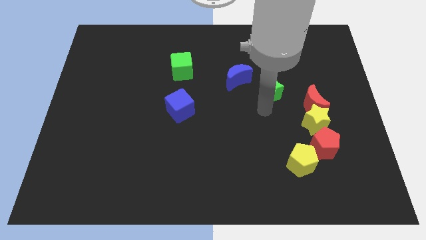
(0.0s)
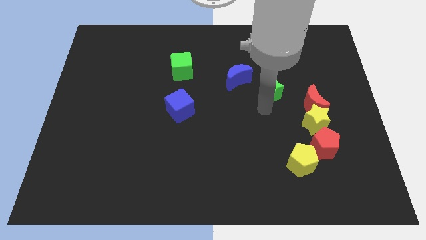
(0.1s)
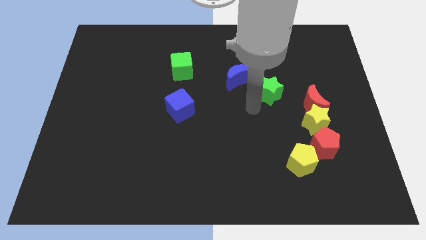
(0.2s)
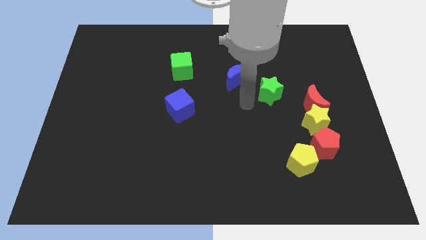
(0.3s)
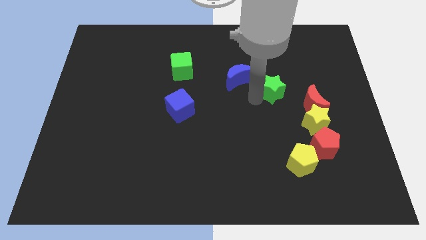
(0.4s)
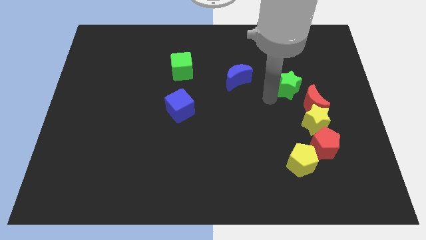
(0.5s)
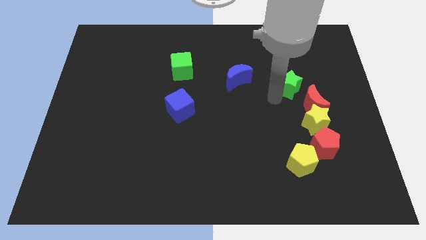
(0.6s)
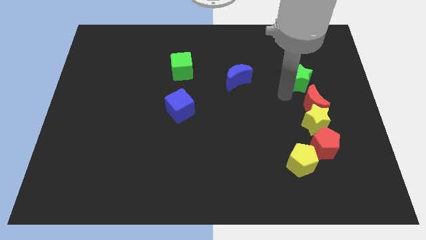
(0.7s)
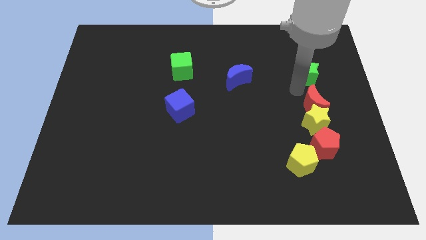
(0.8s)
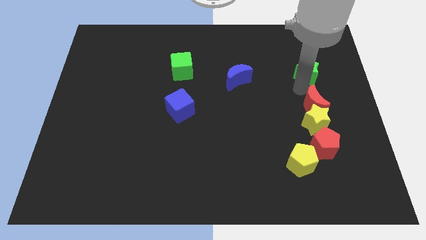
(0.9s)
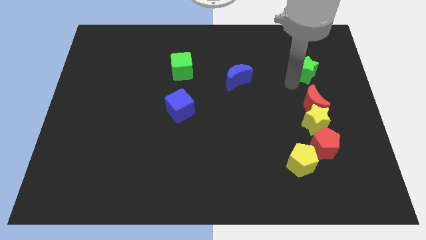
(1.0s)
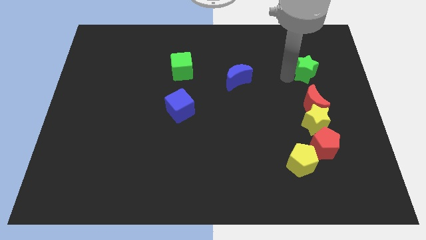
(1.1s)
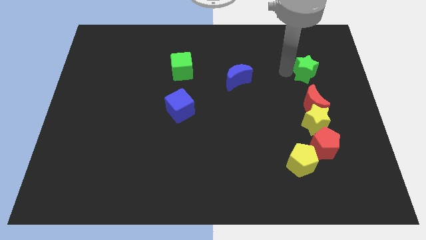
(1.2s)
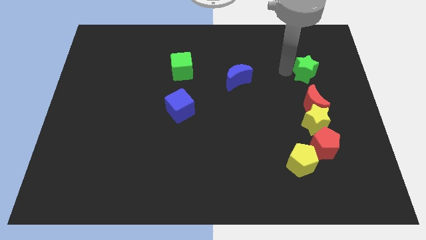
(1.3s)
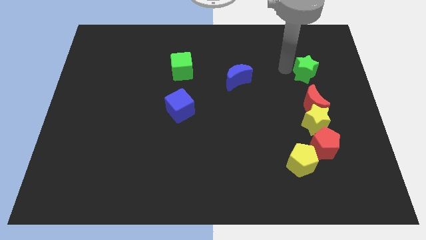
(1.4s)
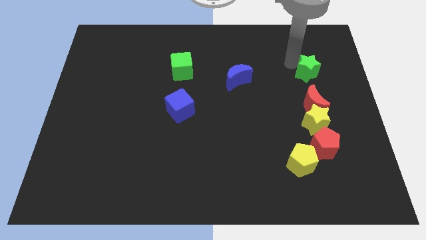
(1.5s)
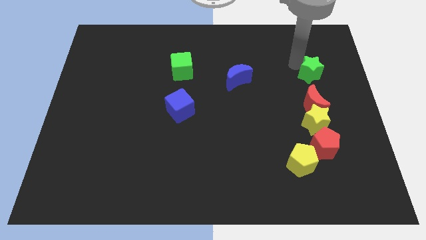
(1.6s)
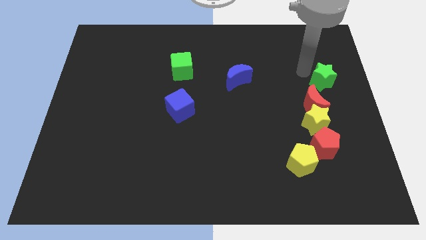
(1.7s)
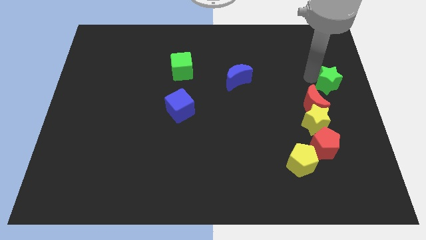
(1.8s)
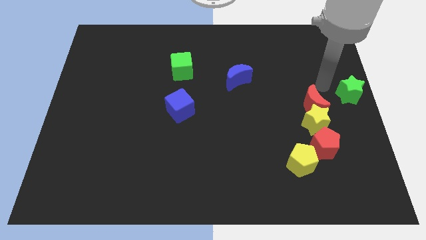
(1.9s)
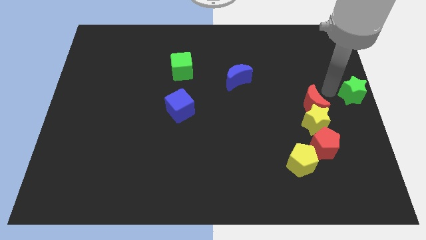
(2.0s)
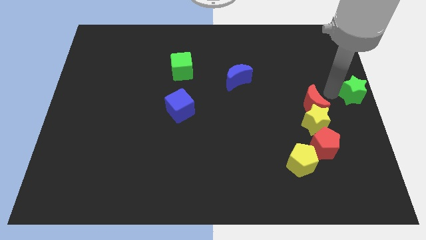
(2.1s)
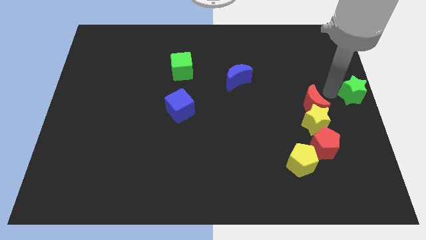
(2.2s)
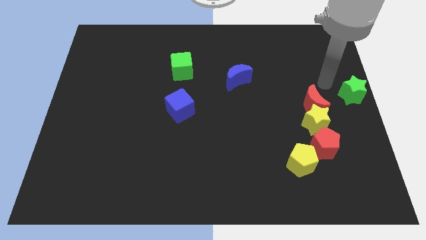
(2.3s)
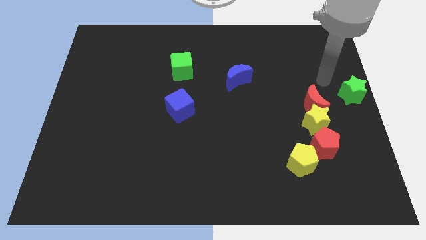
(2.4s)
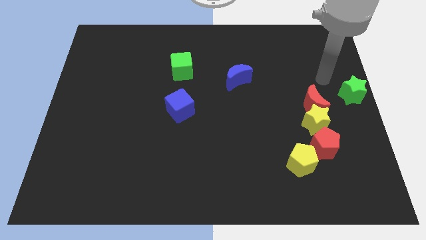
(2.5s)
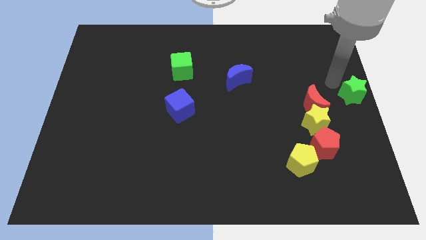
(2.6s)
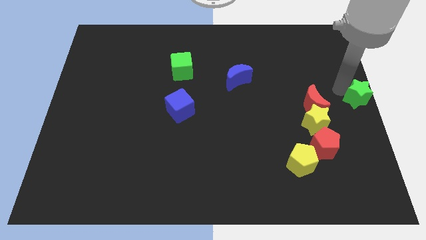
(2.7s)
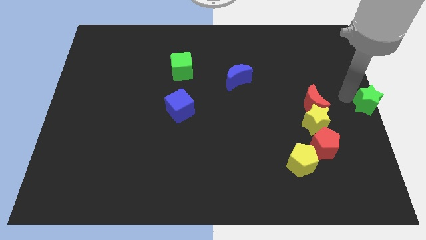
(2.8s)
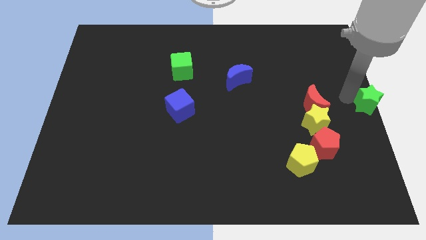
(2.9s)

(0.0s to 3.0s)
push green star on center right

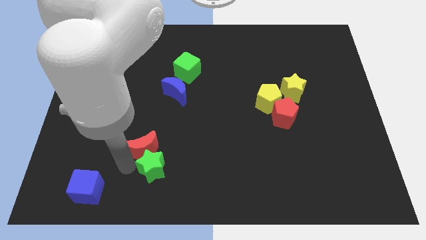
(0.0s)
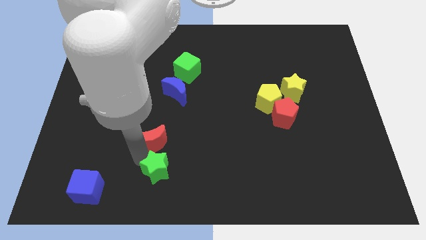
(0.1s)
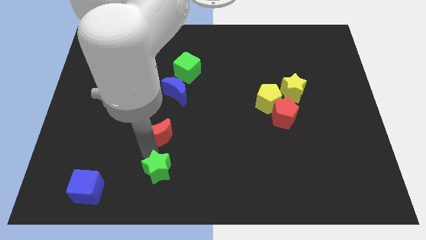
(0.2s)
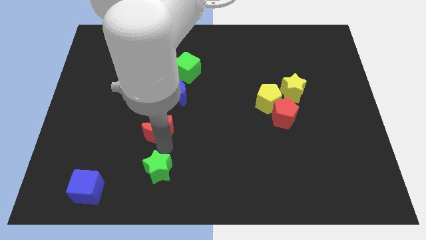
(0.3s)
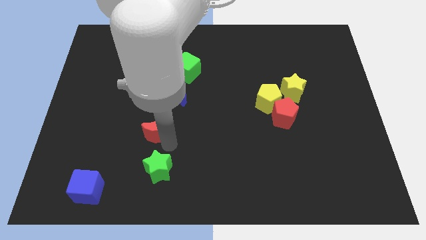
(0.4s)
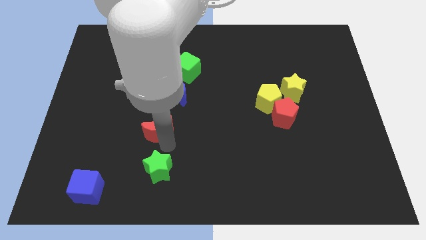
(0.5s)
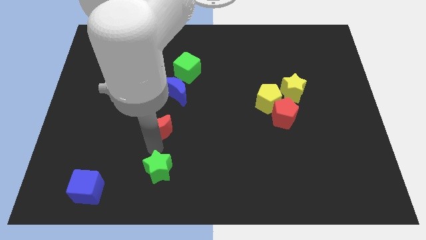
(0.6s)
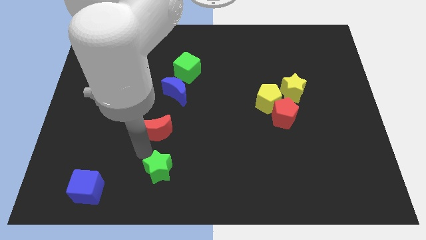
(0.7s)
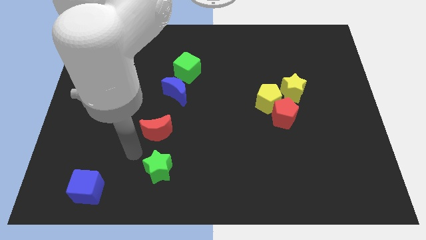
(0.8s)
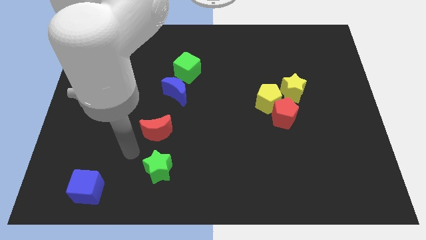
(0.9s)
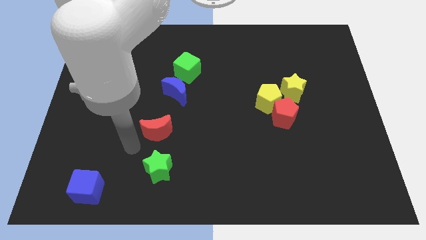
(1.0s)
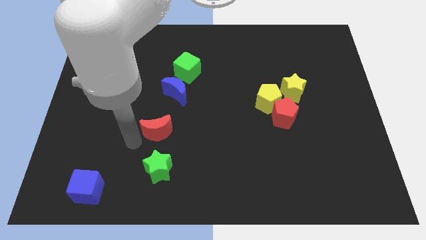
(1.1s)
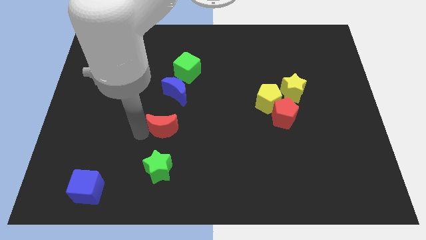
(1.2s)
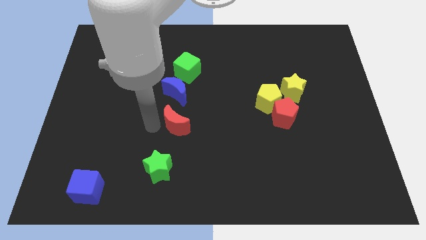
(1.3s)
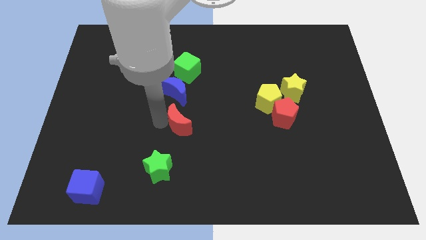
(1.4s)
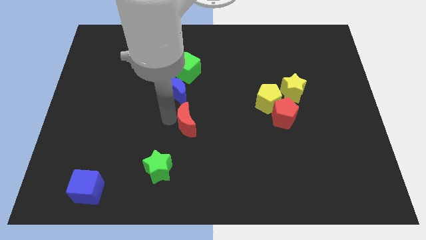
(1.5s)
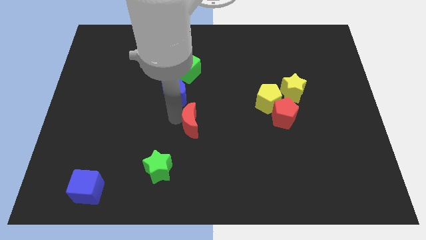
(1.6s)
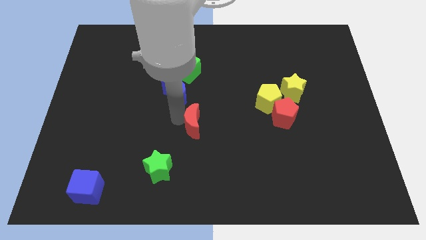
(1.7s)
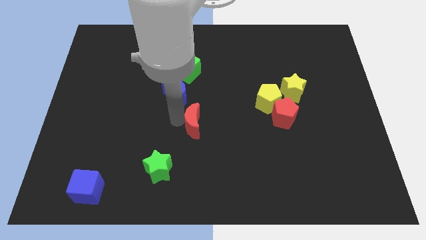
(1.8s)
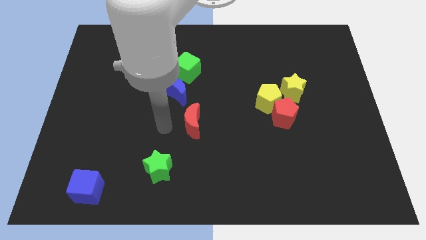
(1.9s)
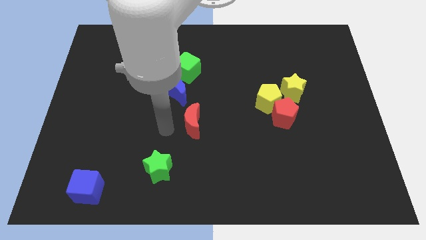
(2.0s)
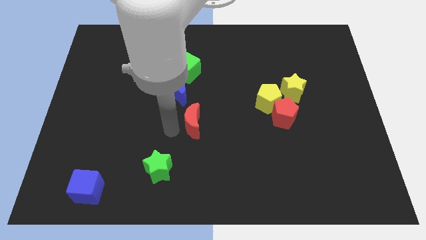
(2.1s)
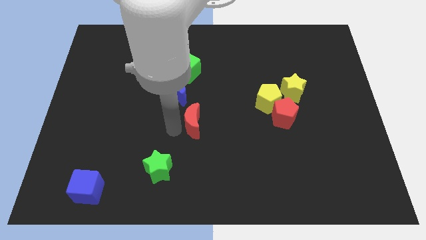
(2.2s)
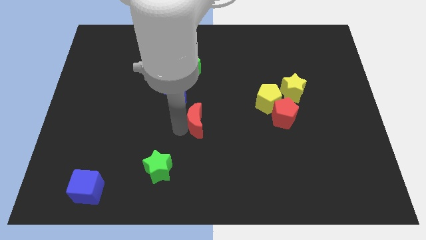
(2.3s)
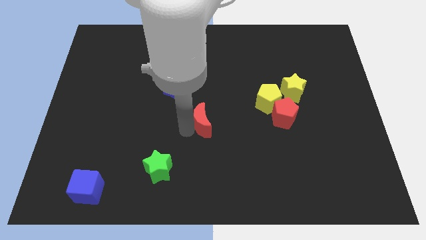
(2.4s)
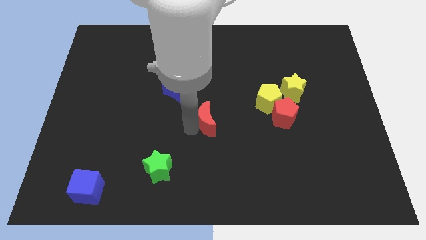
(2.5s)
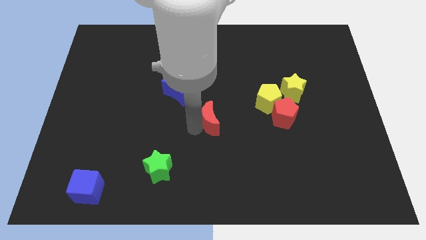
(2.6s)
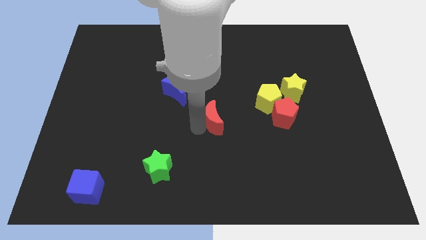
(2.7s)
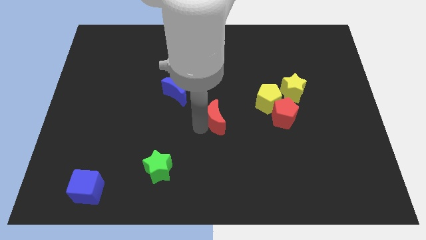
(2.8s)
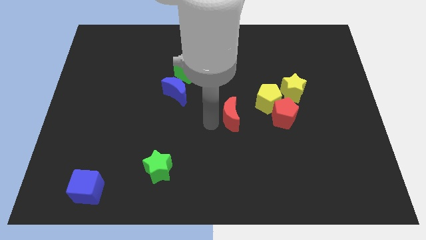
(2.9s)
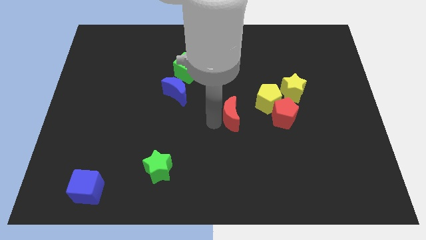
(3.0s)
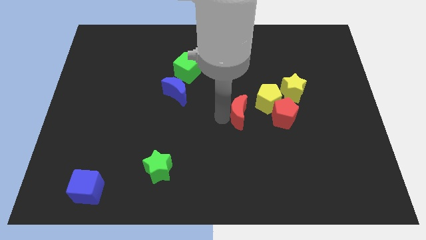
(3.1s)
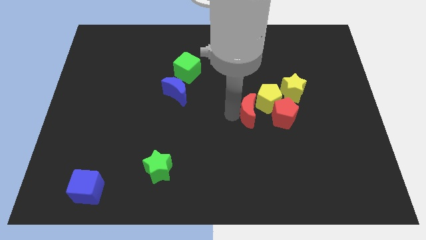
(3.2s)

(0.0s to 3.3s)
move the red crescent left to the red pentagon

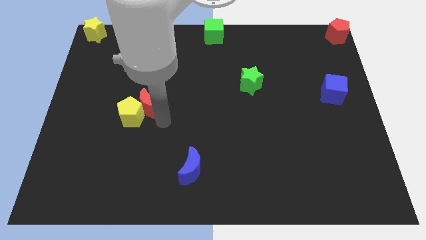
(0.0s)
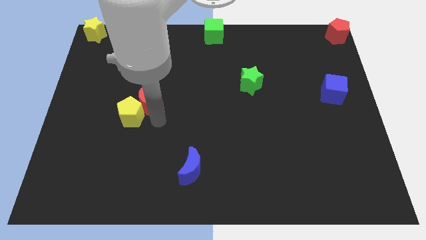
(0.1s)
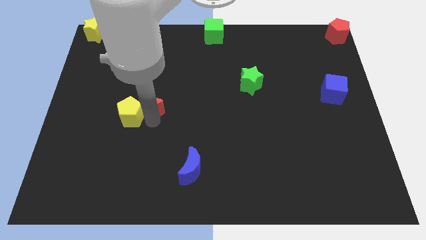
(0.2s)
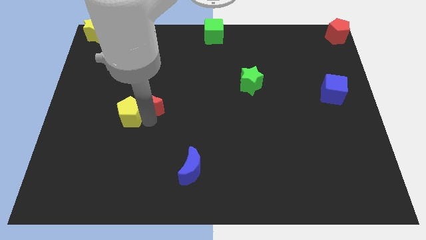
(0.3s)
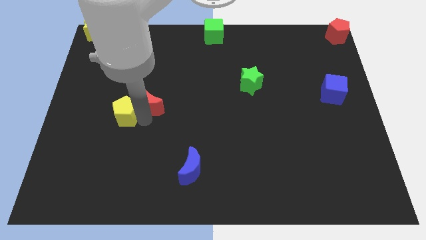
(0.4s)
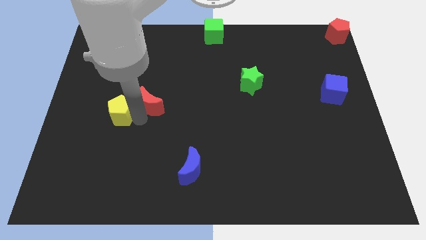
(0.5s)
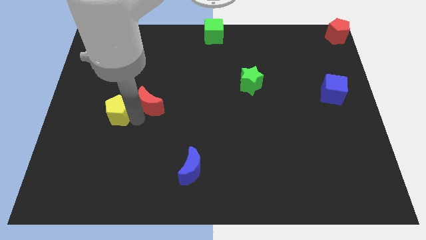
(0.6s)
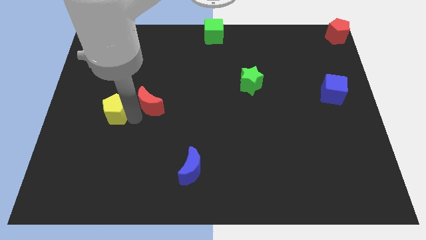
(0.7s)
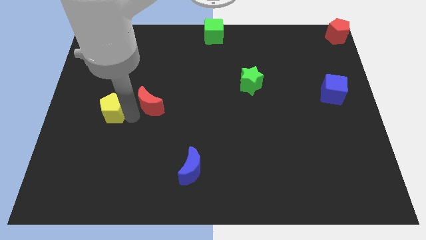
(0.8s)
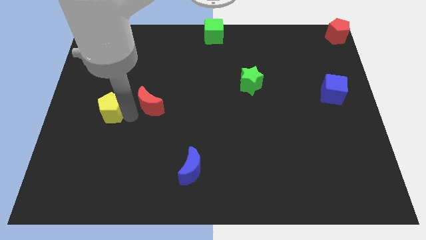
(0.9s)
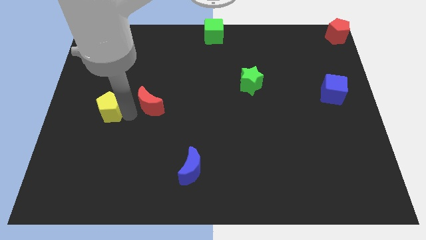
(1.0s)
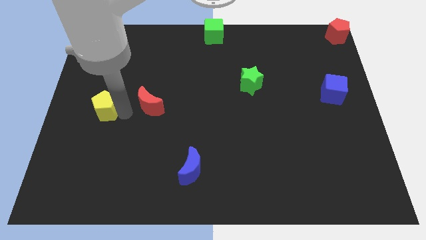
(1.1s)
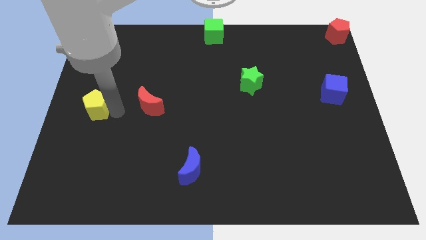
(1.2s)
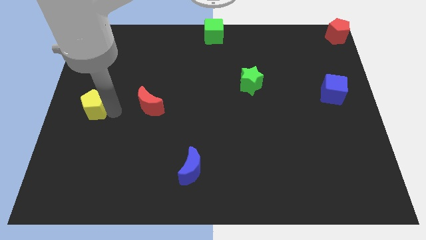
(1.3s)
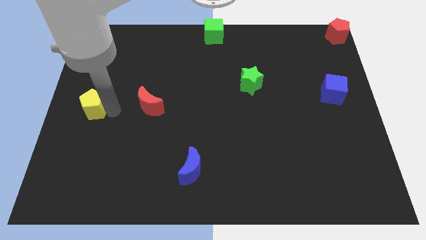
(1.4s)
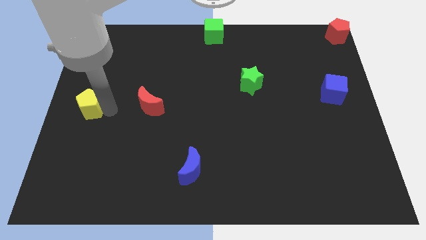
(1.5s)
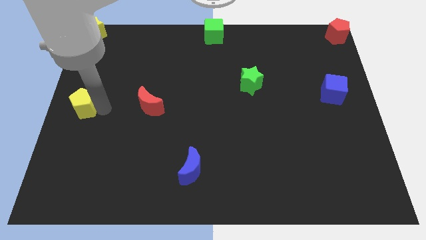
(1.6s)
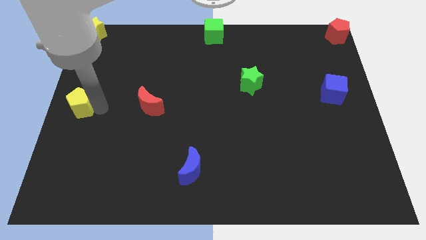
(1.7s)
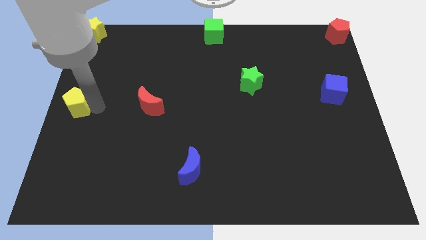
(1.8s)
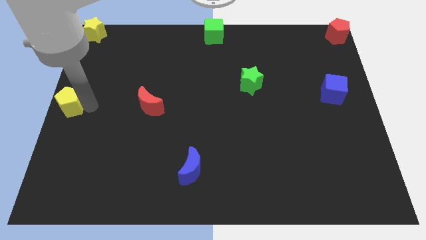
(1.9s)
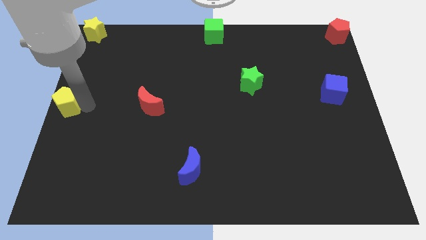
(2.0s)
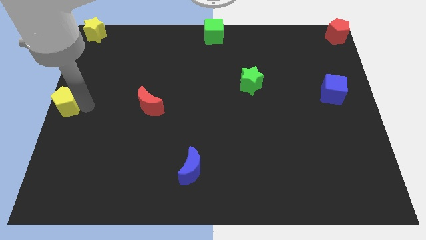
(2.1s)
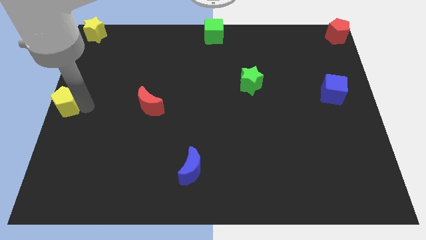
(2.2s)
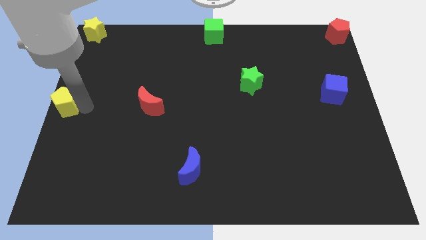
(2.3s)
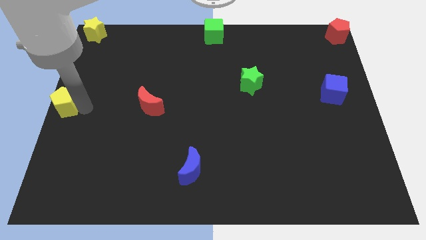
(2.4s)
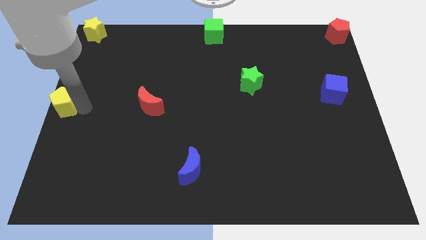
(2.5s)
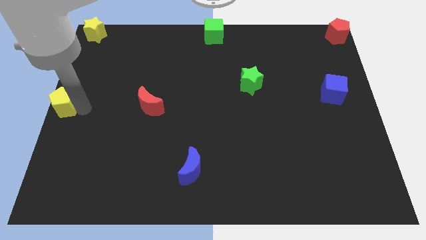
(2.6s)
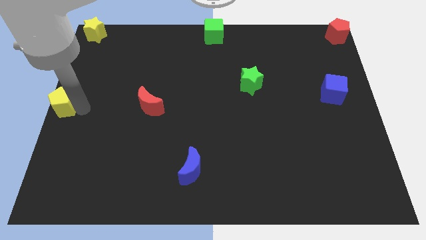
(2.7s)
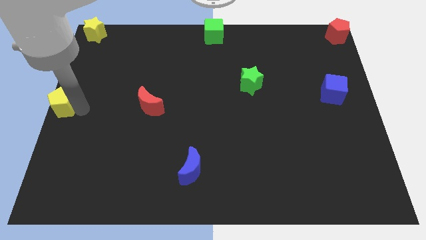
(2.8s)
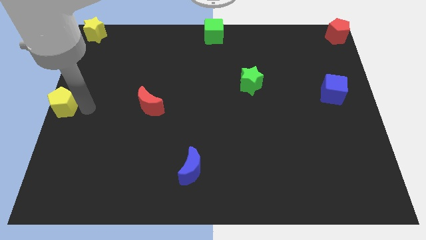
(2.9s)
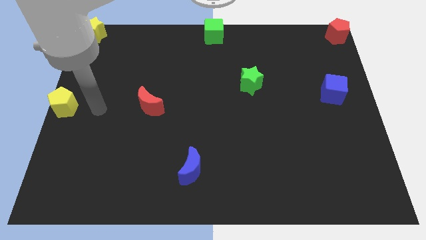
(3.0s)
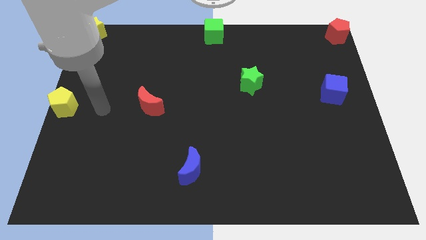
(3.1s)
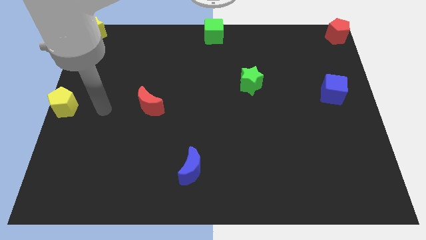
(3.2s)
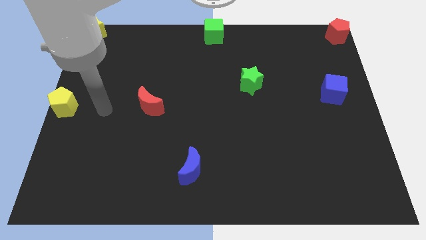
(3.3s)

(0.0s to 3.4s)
place the yellow pentagon to the left center of the board
